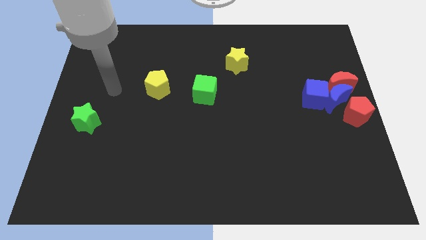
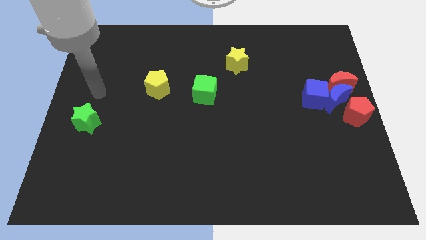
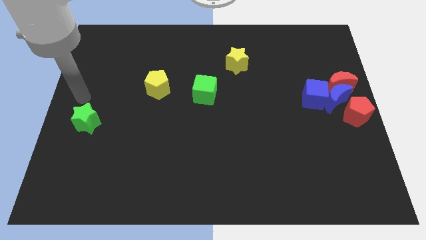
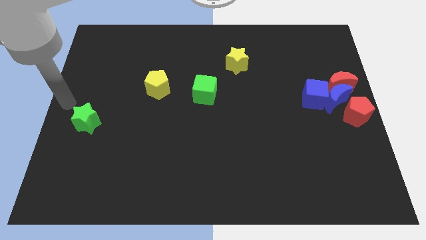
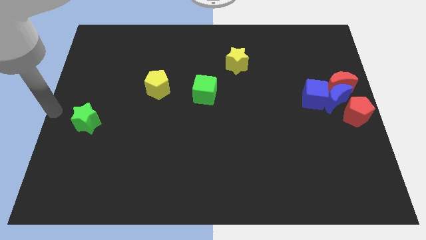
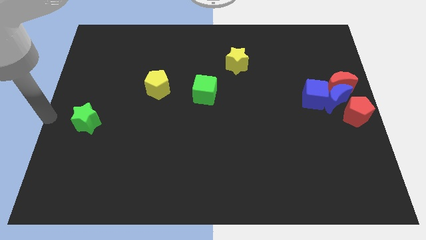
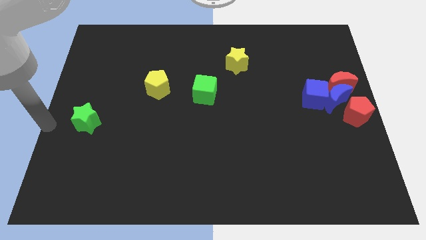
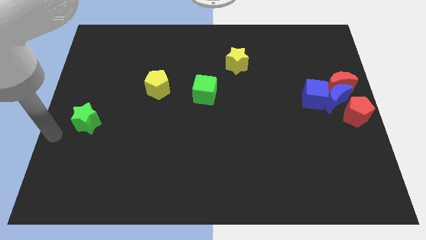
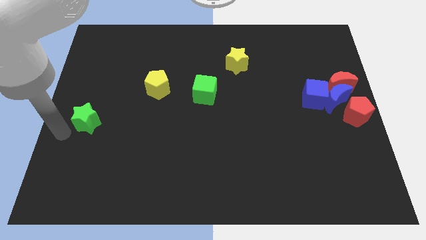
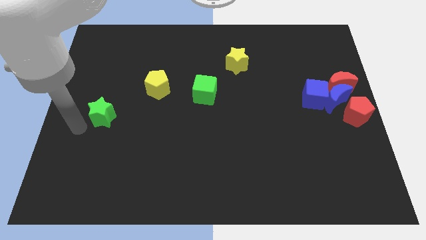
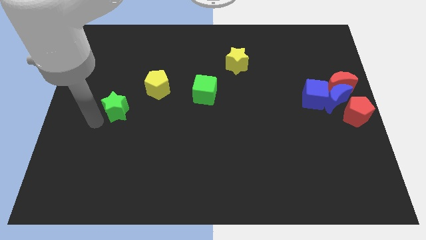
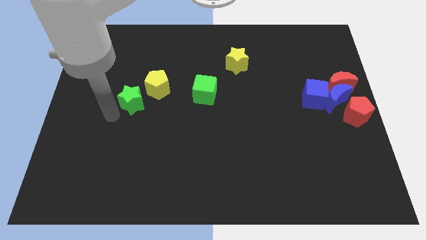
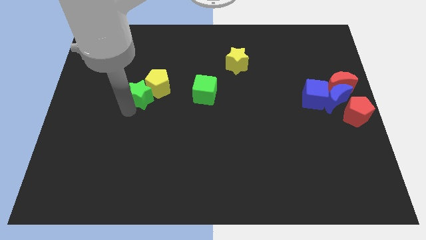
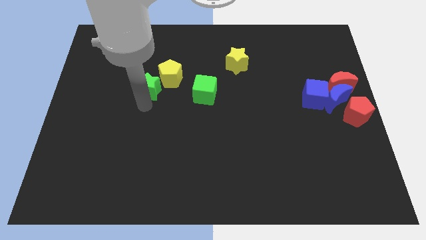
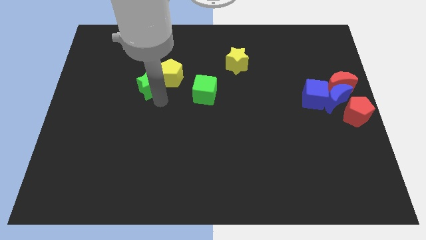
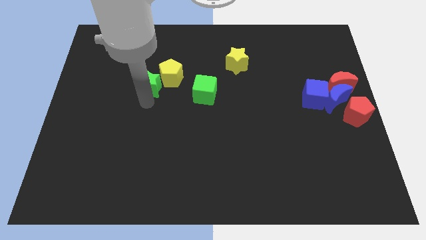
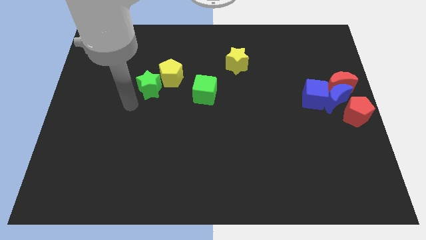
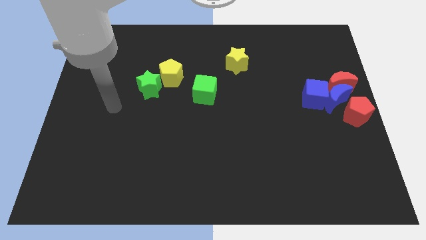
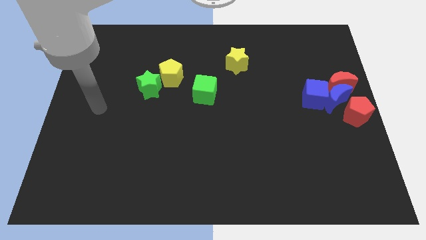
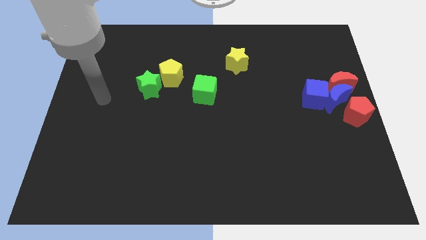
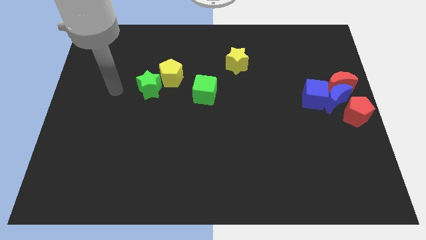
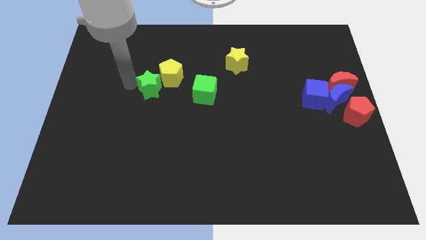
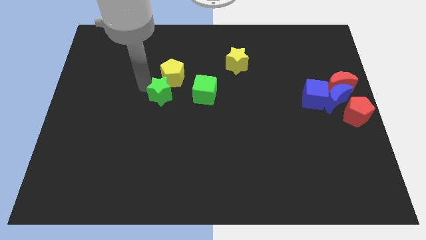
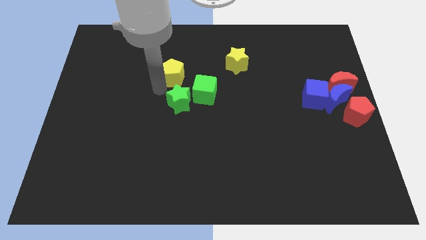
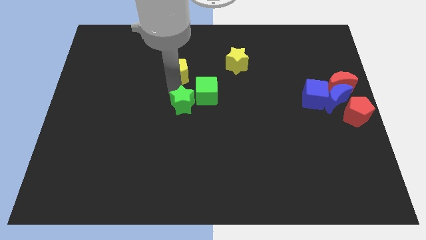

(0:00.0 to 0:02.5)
push the green star into the yellow pentagon

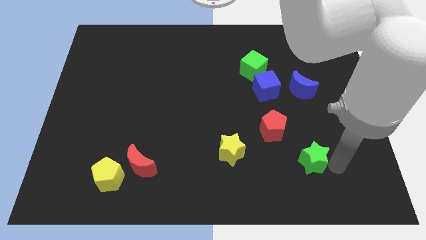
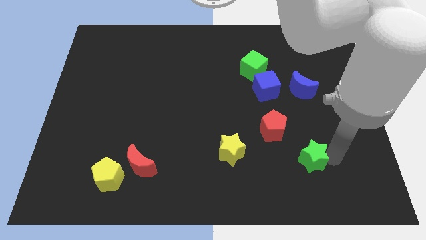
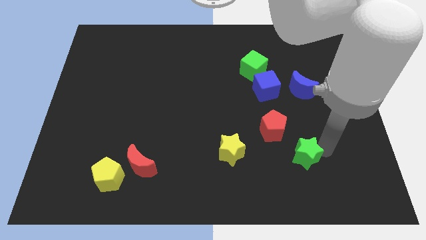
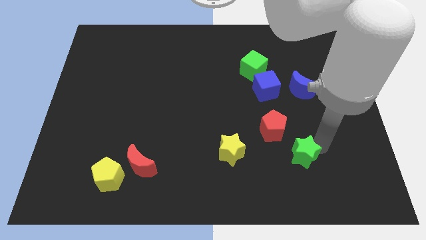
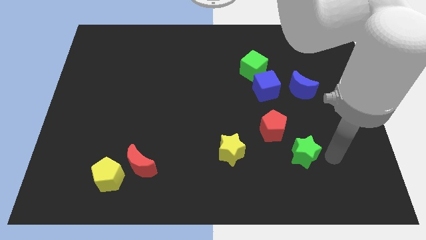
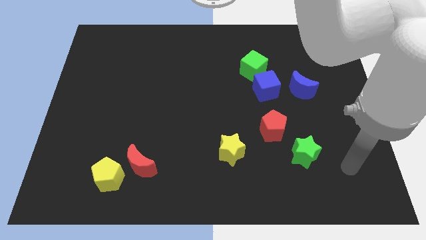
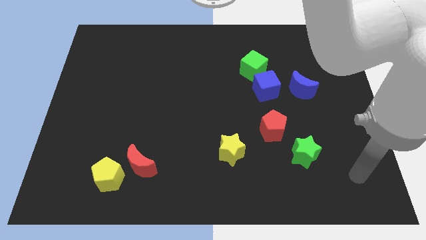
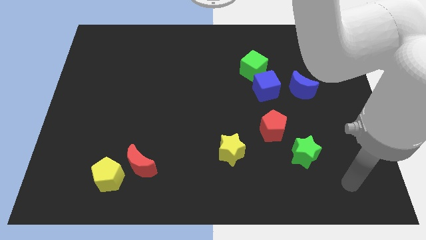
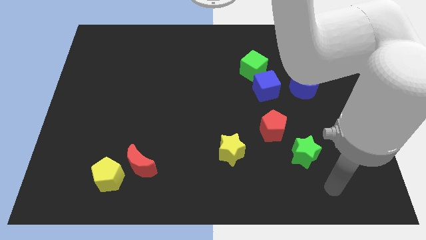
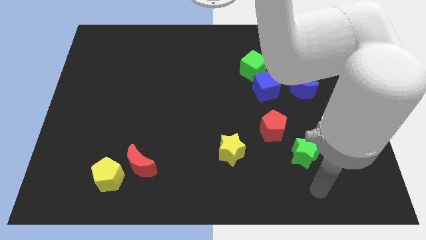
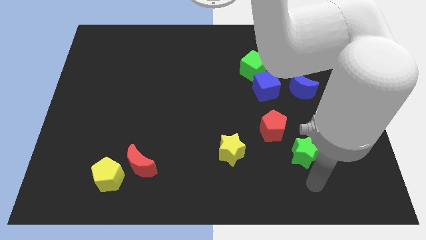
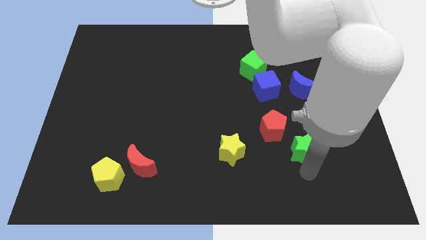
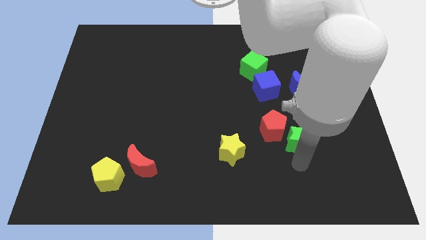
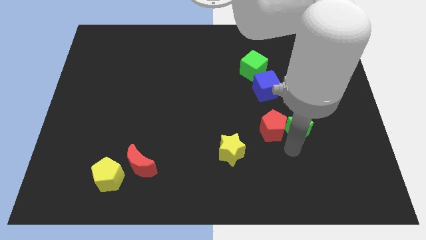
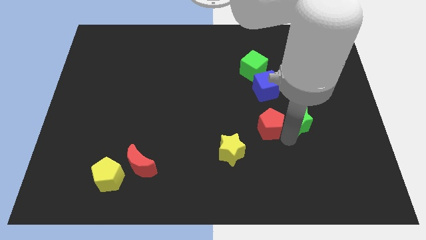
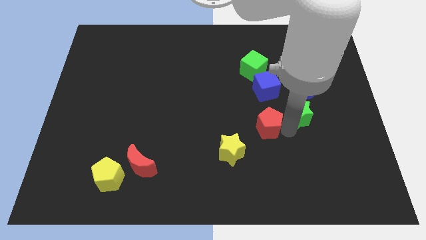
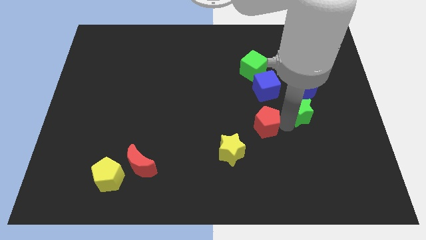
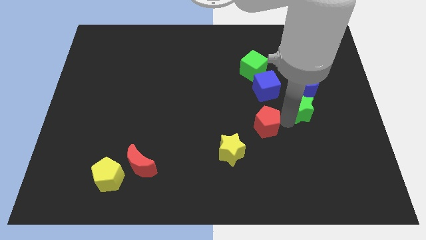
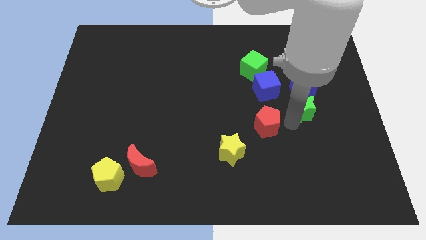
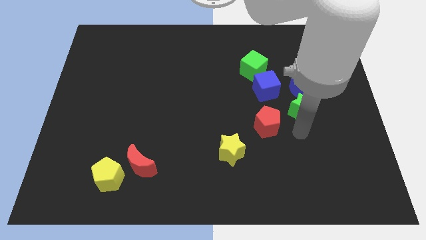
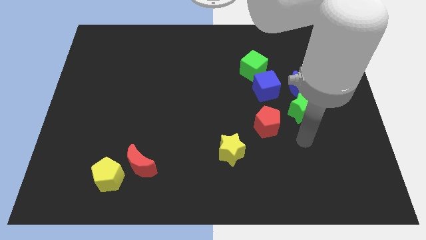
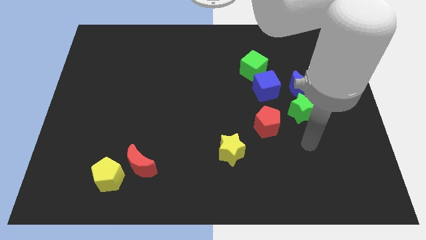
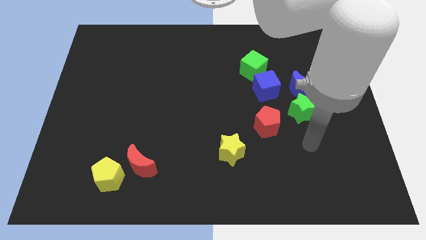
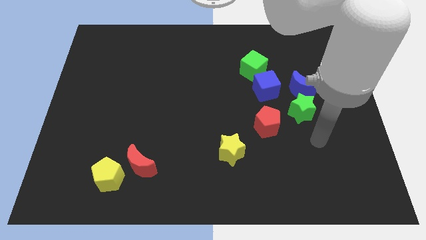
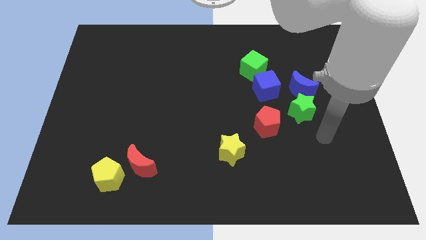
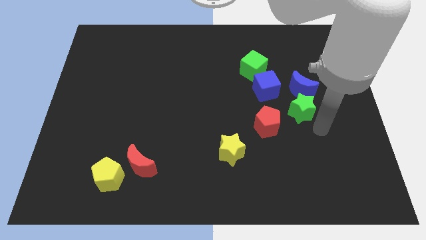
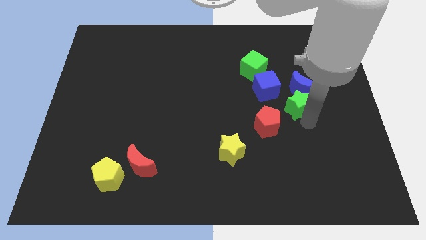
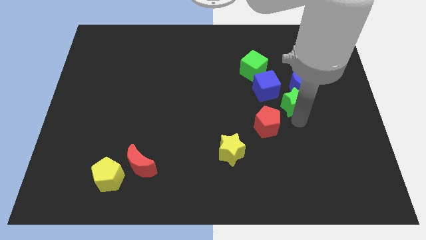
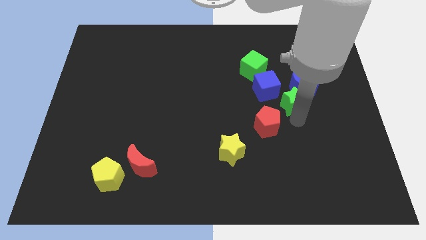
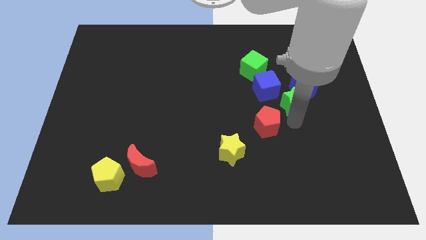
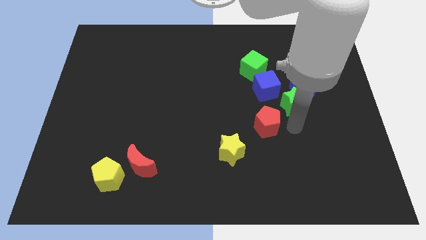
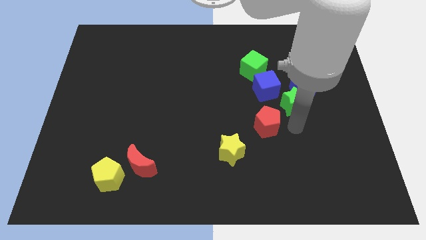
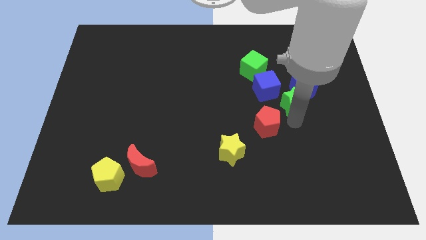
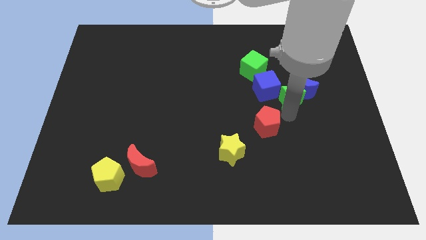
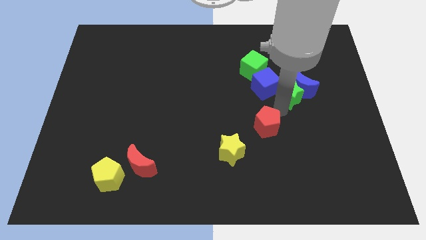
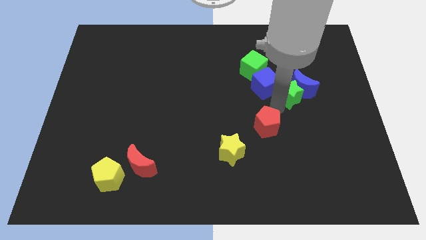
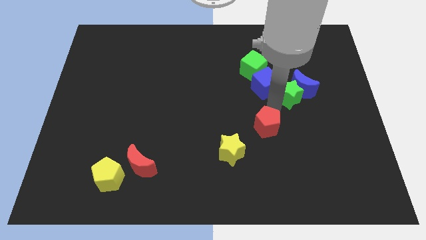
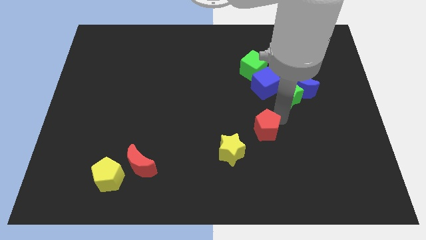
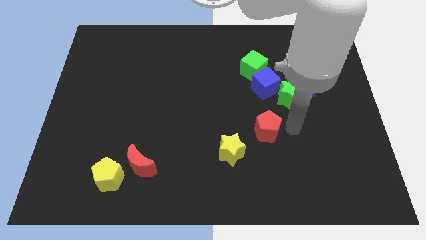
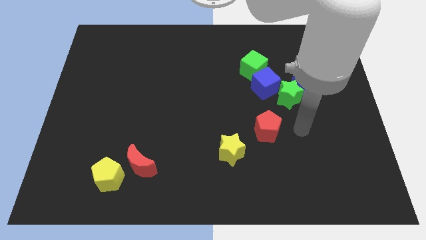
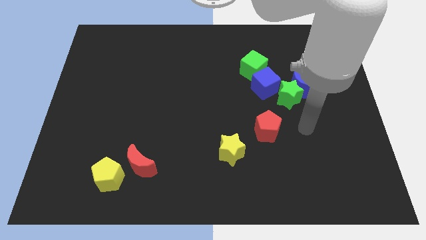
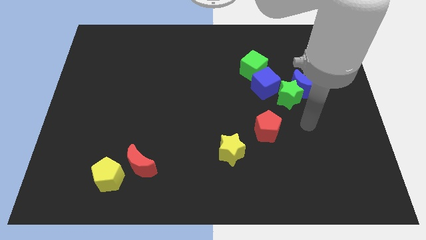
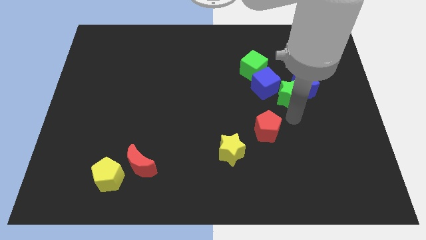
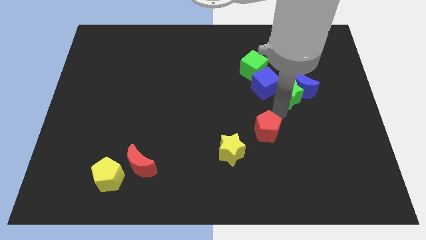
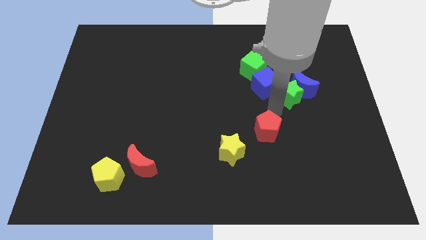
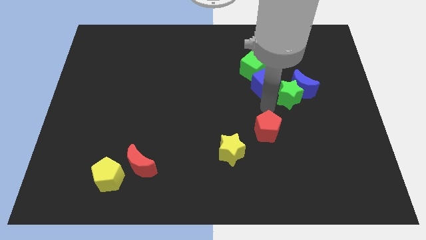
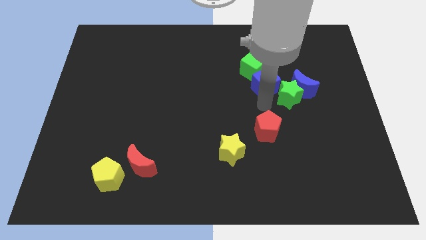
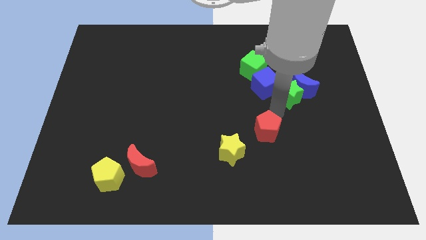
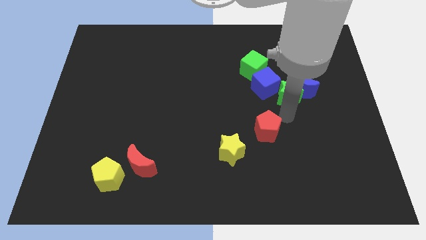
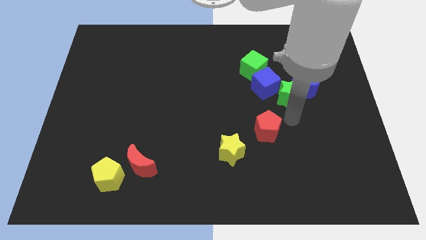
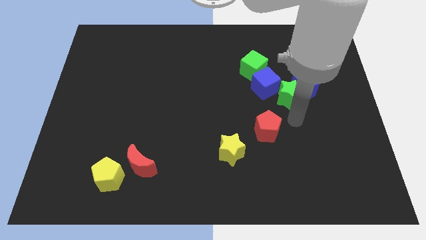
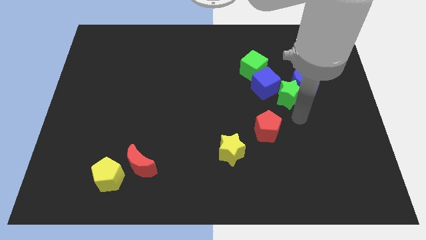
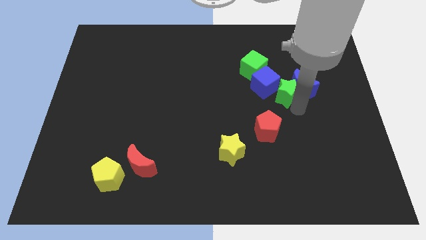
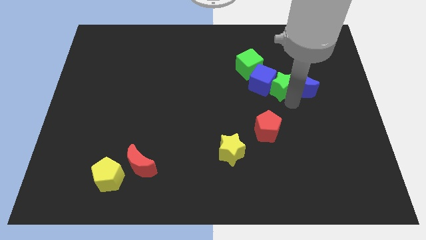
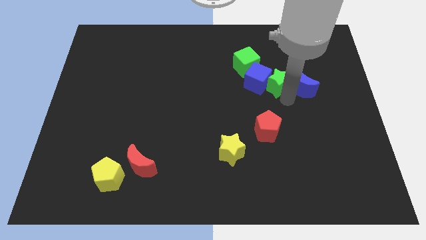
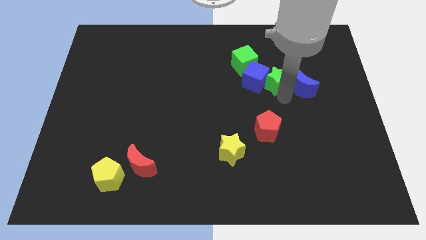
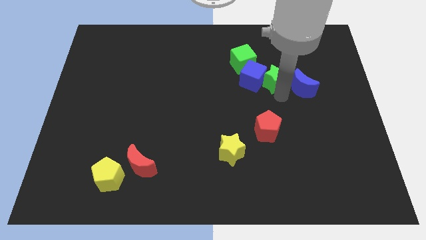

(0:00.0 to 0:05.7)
move the green star between the blue moon and blue cube

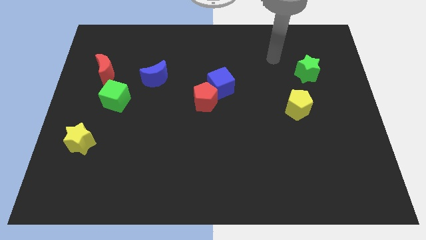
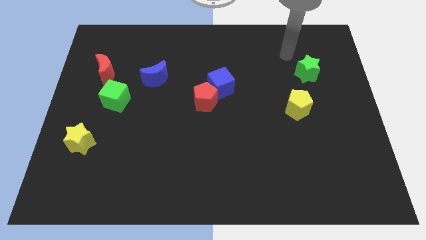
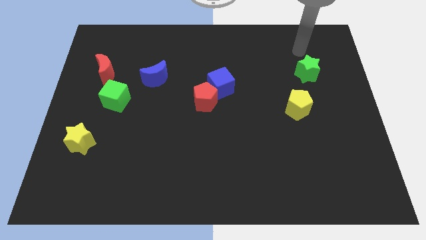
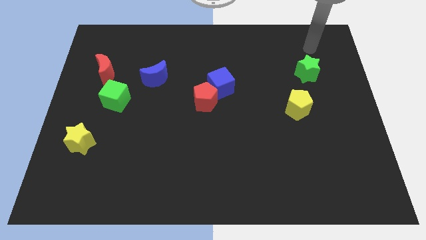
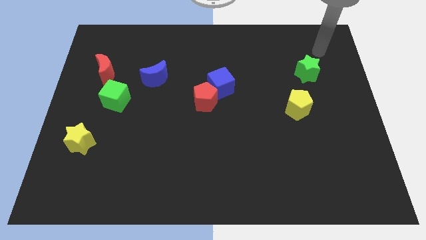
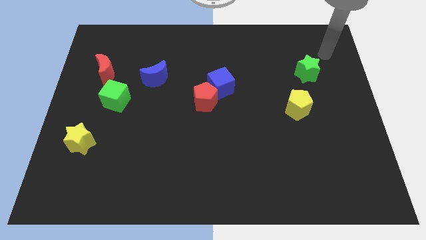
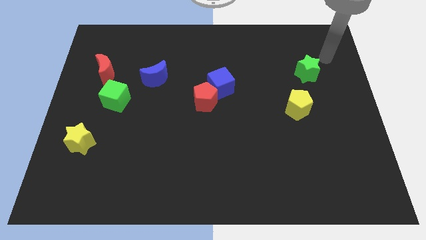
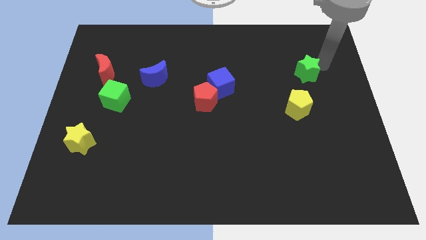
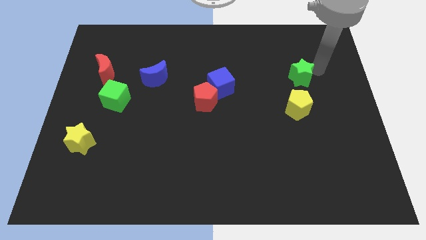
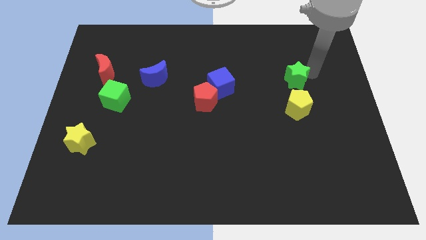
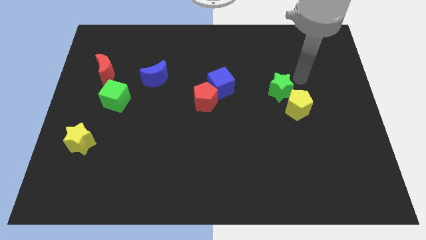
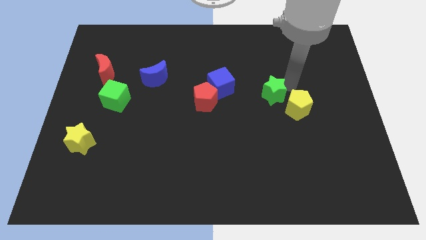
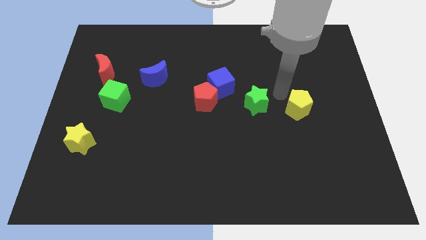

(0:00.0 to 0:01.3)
put the green star in between the red pentagon and yellow pentagon
